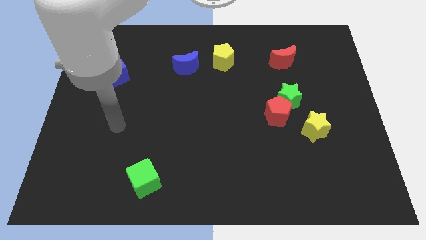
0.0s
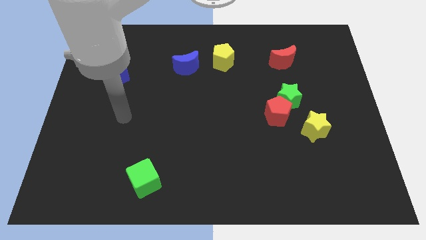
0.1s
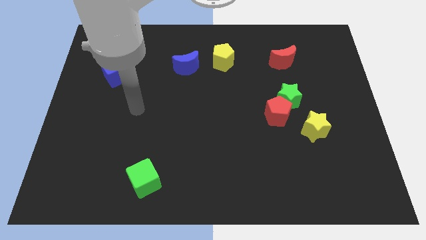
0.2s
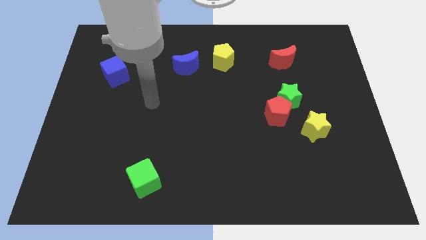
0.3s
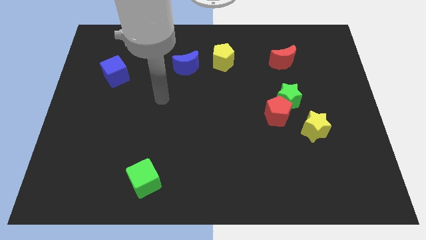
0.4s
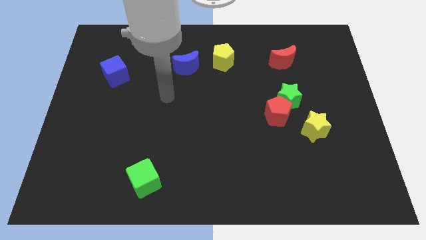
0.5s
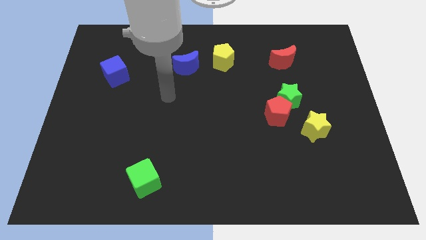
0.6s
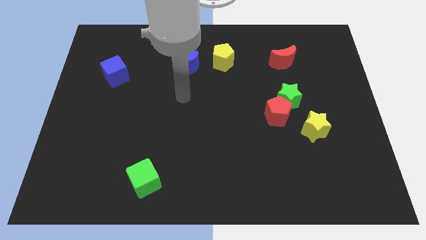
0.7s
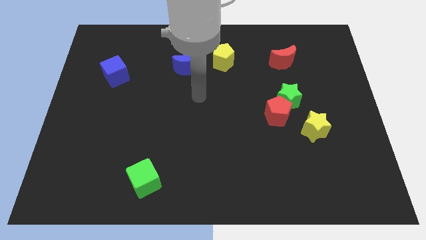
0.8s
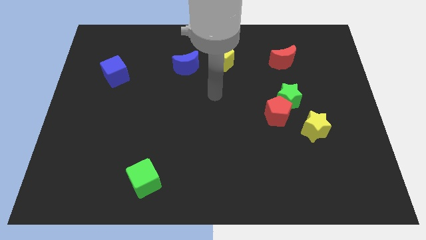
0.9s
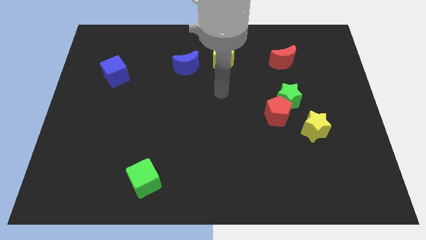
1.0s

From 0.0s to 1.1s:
move your arm at the bottom side of the yellow pentagon

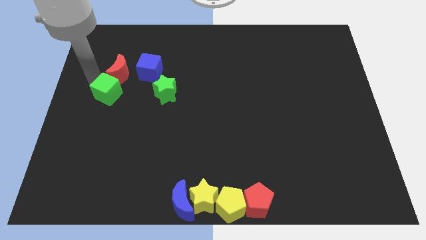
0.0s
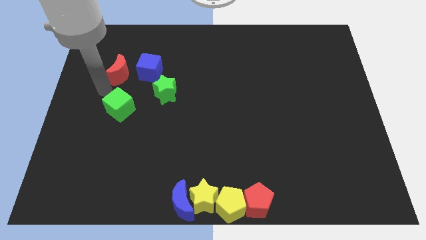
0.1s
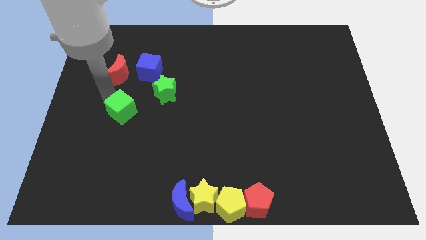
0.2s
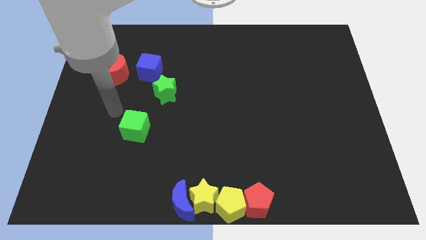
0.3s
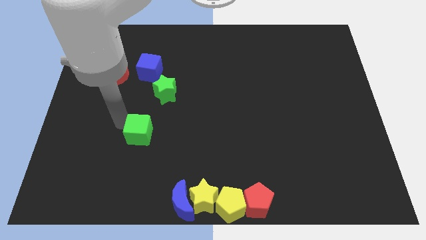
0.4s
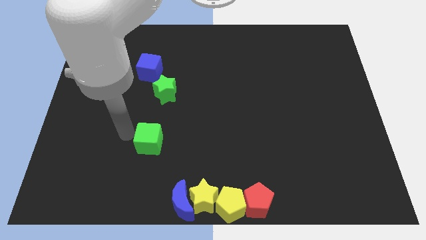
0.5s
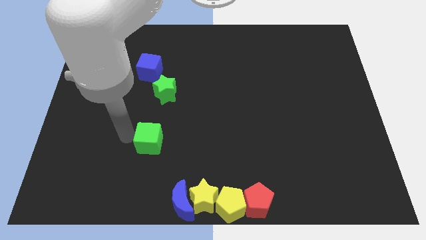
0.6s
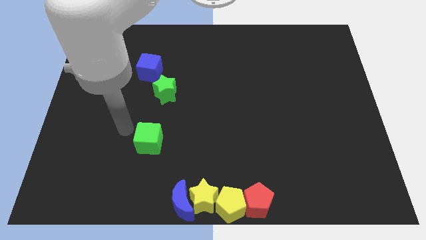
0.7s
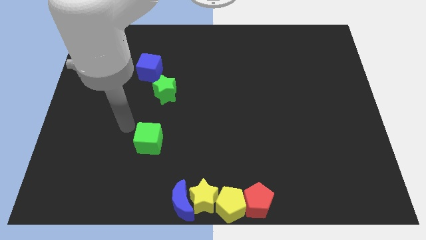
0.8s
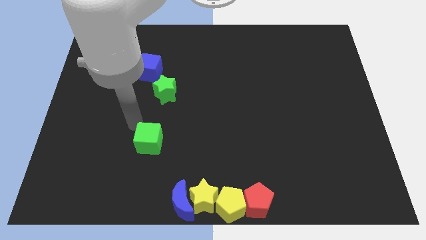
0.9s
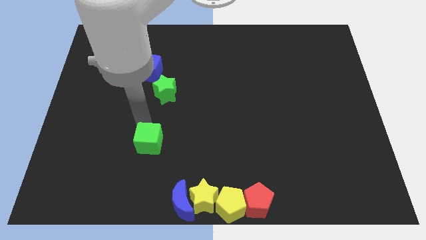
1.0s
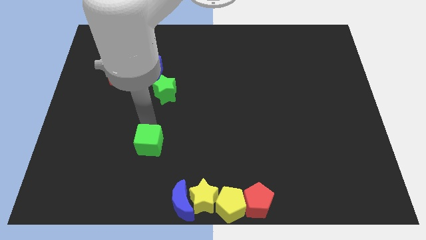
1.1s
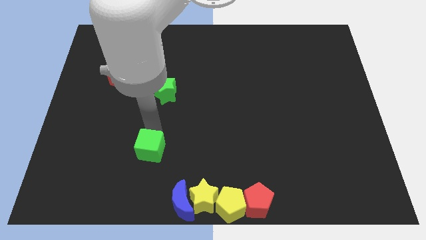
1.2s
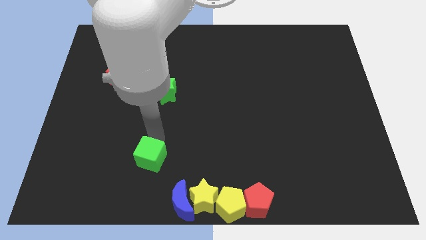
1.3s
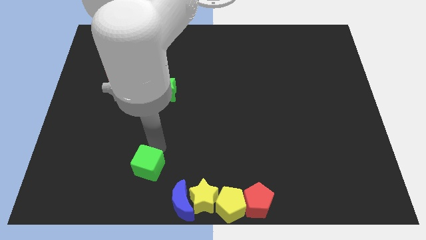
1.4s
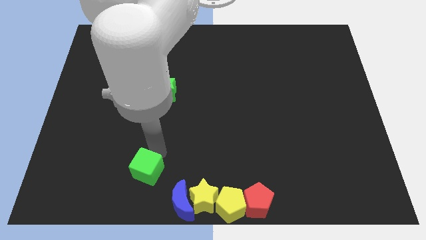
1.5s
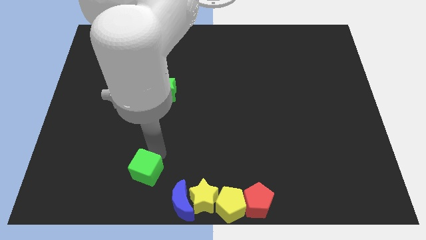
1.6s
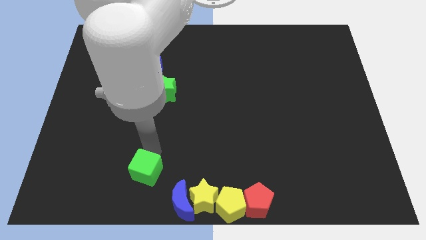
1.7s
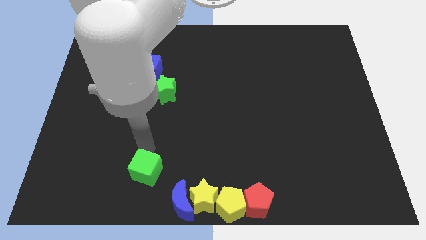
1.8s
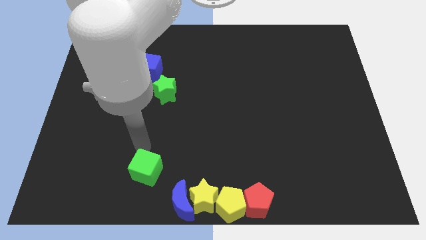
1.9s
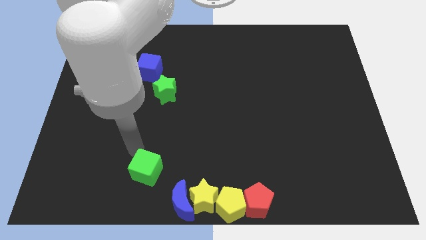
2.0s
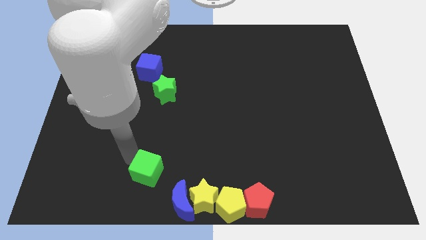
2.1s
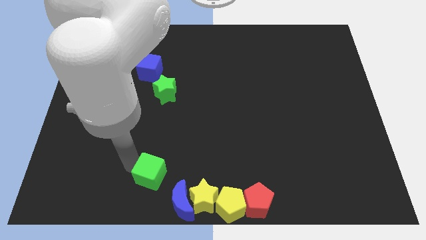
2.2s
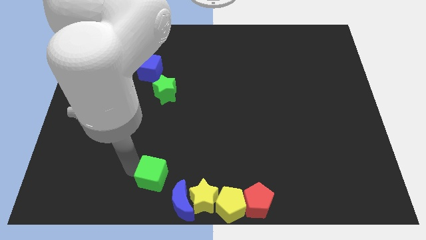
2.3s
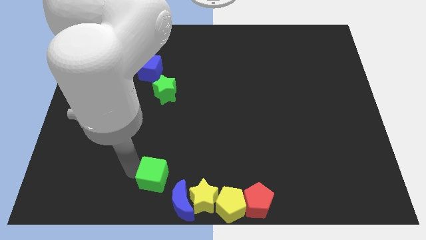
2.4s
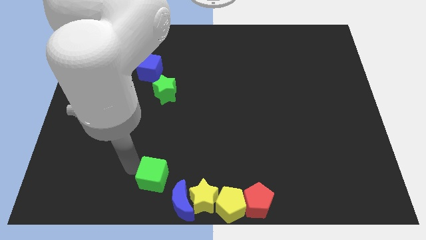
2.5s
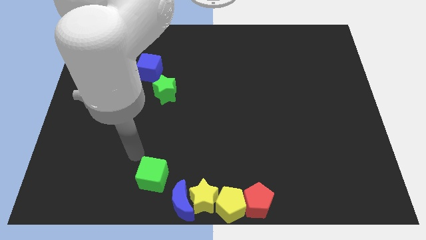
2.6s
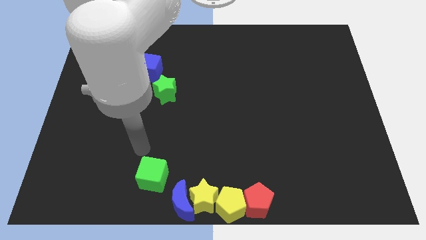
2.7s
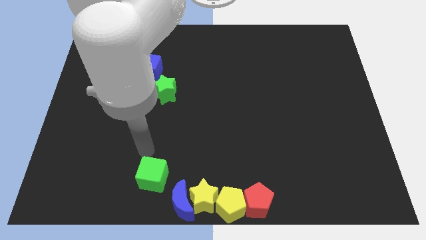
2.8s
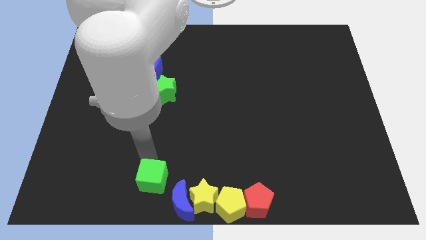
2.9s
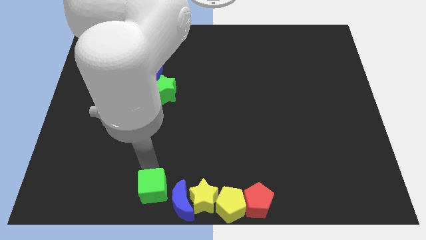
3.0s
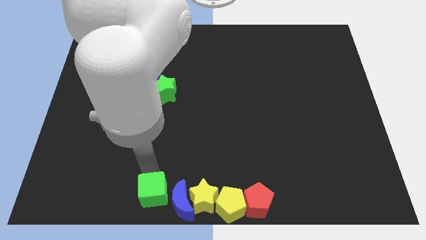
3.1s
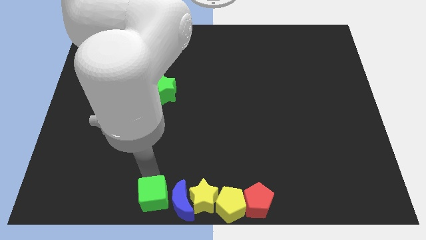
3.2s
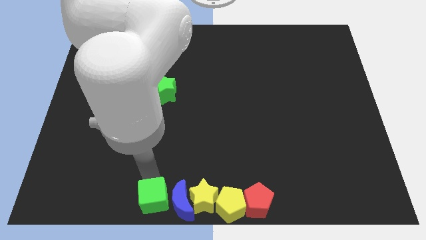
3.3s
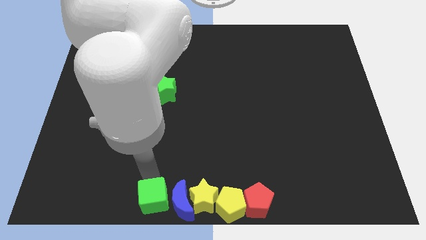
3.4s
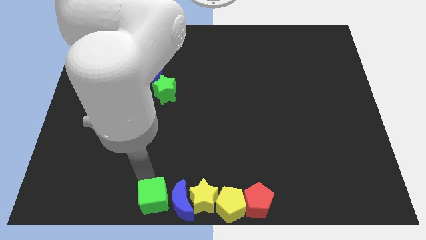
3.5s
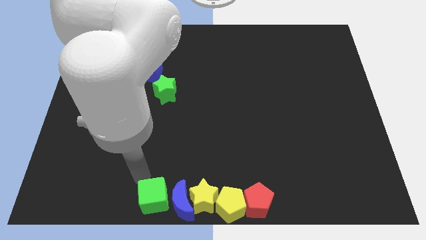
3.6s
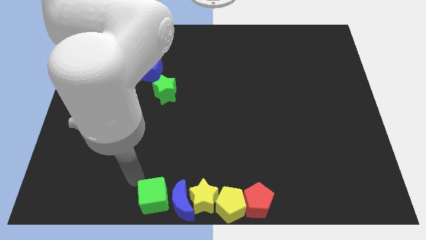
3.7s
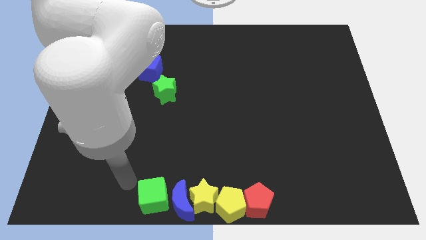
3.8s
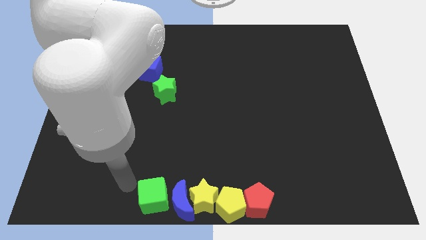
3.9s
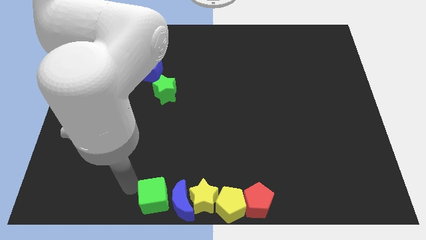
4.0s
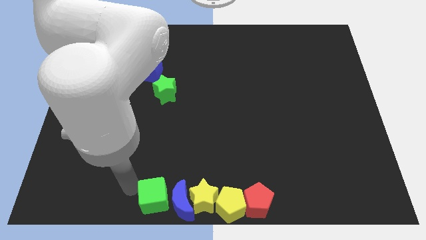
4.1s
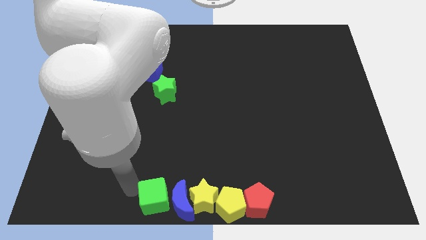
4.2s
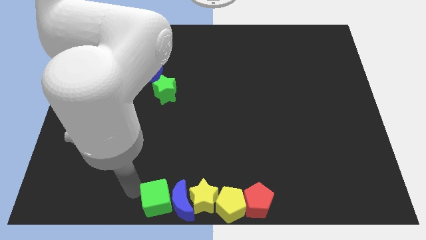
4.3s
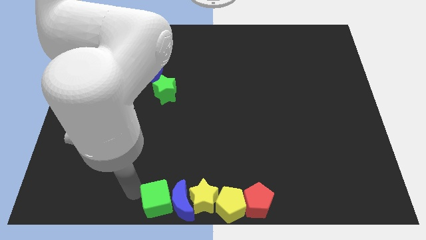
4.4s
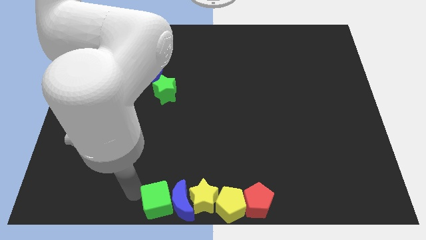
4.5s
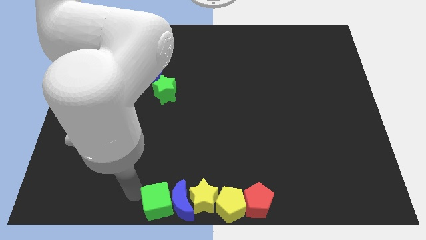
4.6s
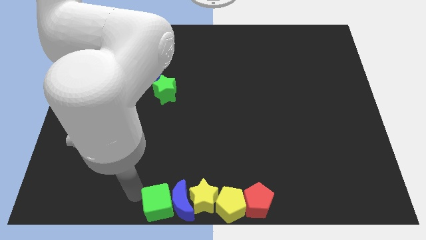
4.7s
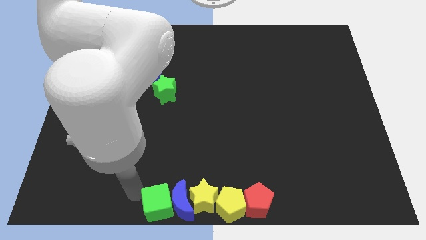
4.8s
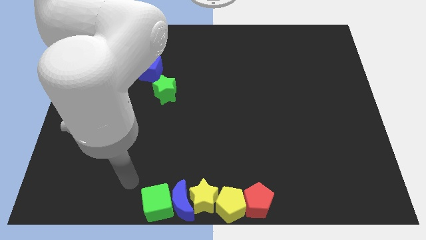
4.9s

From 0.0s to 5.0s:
push the green cube to the bottom of the board

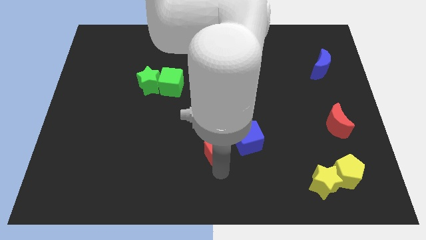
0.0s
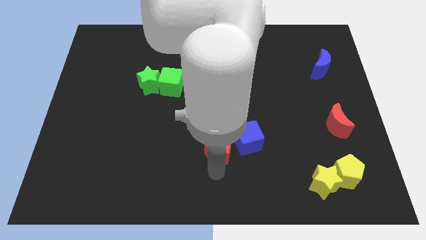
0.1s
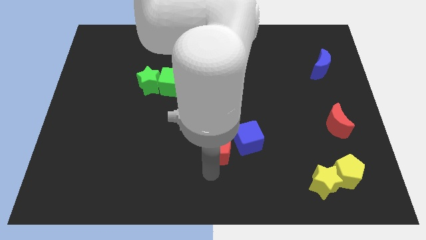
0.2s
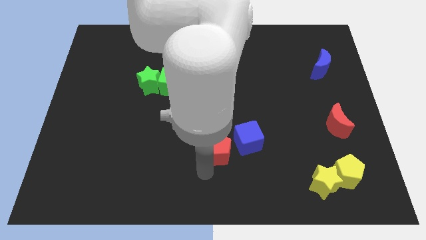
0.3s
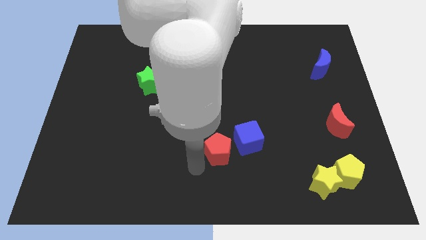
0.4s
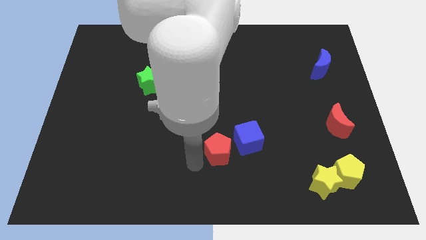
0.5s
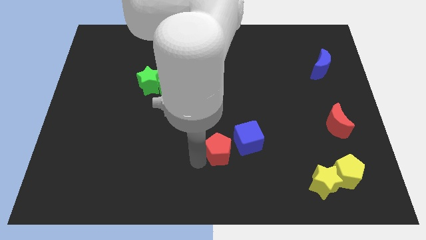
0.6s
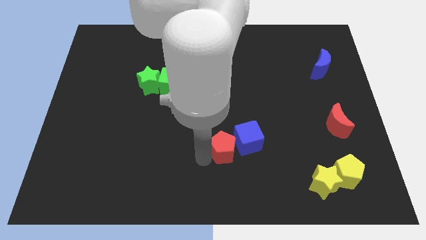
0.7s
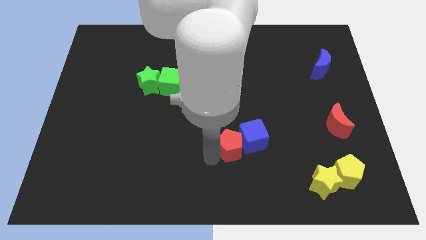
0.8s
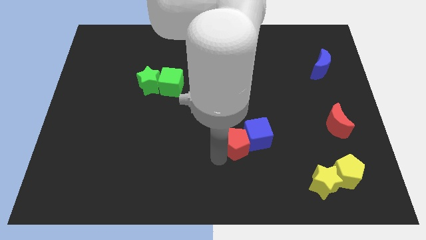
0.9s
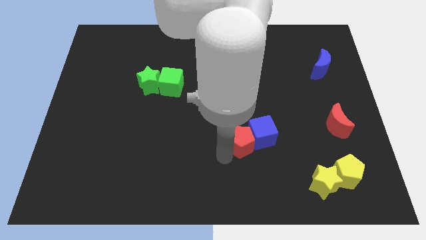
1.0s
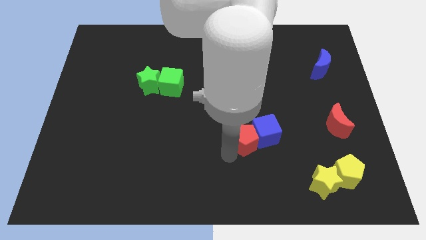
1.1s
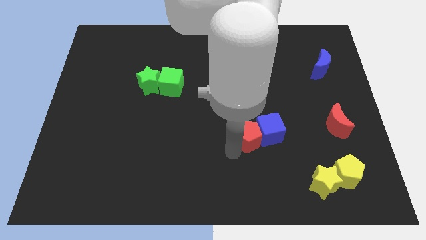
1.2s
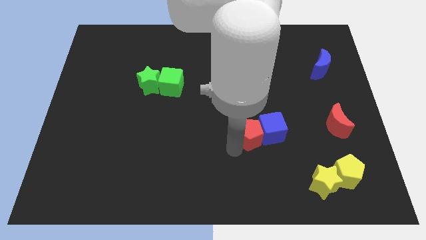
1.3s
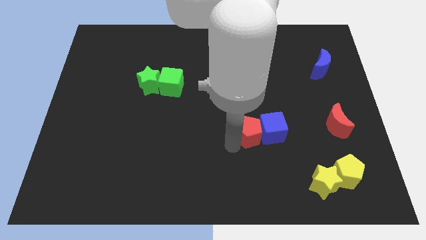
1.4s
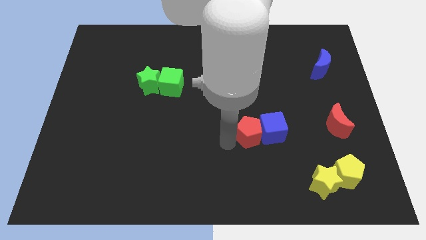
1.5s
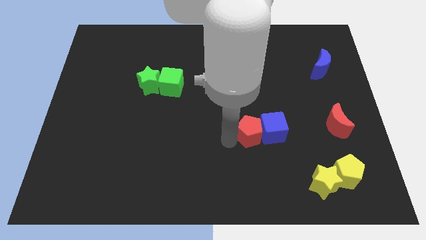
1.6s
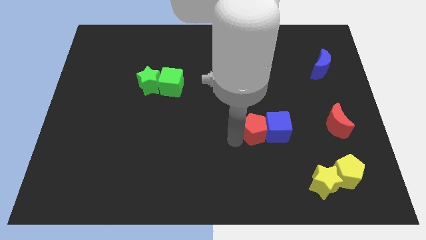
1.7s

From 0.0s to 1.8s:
push the blue cube with red pentagon towards the red crescent

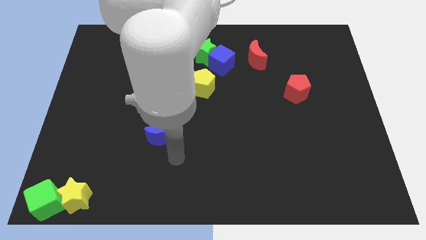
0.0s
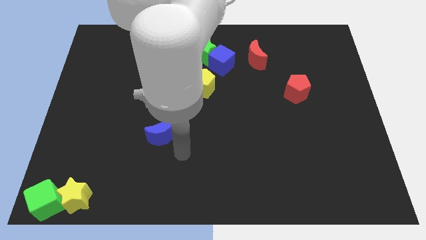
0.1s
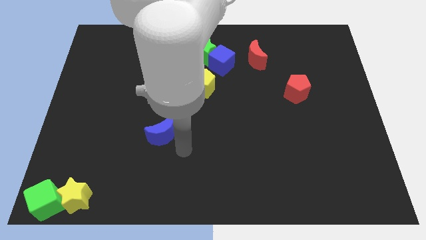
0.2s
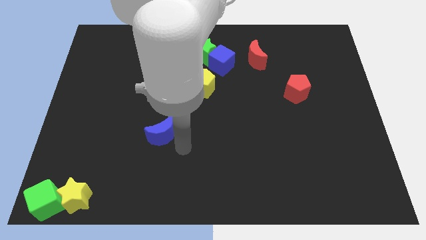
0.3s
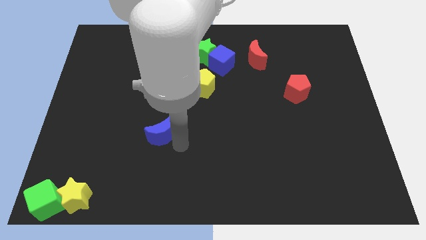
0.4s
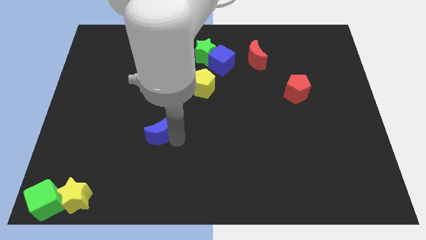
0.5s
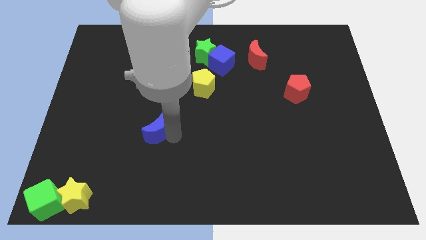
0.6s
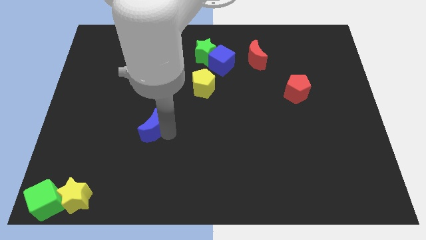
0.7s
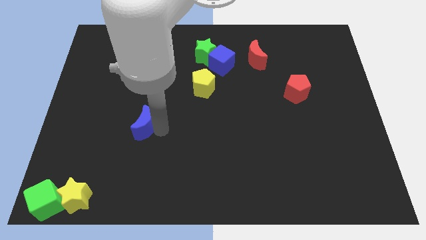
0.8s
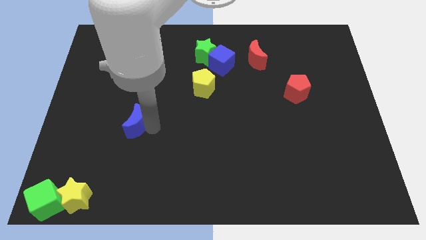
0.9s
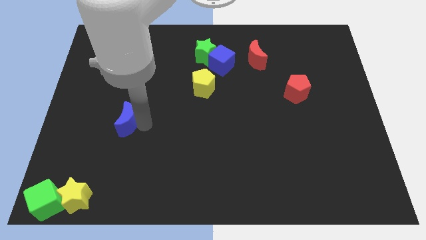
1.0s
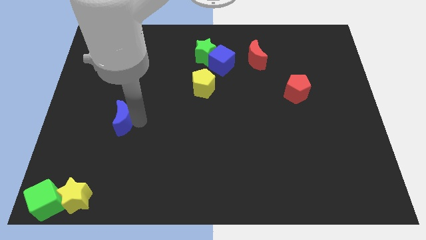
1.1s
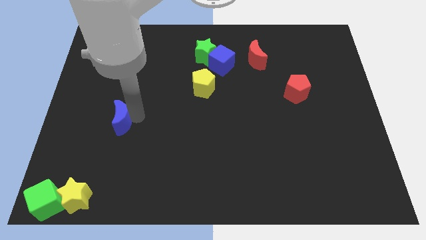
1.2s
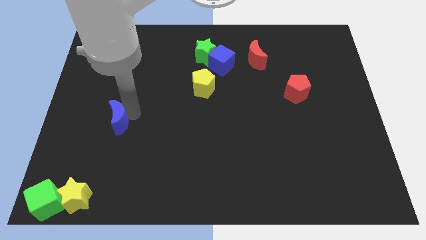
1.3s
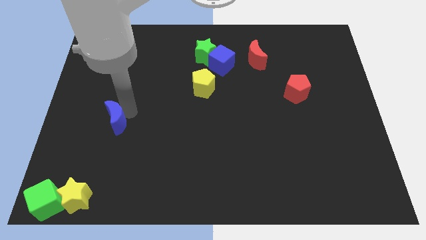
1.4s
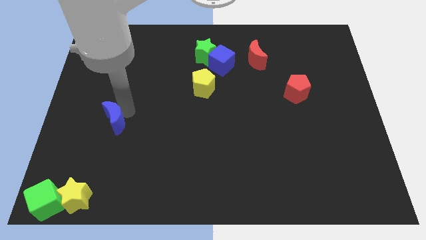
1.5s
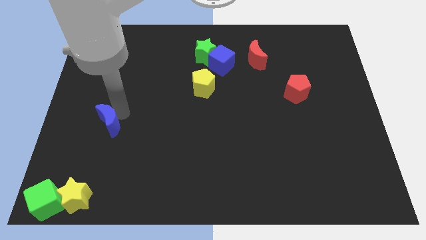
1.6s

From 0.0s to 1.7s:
push the blue moon towards the center left of the board
